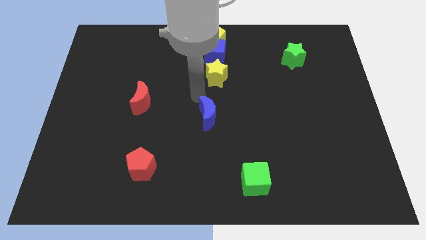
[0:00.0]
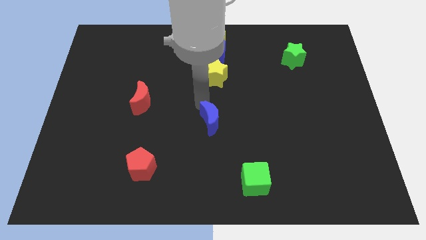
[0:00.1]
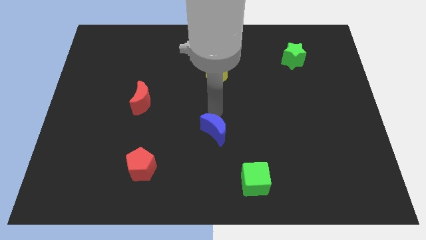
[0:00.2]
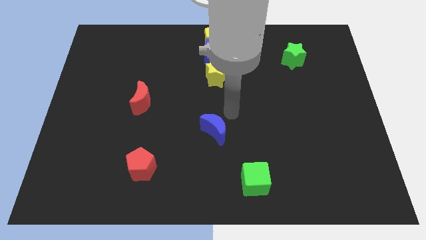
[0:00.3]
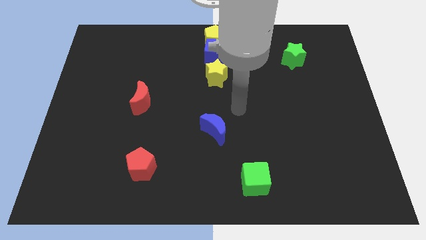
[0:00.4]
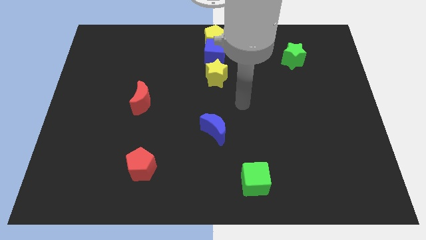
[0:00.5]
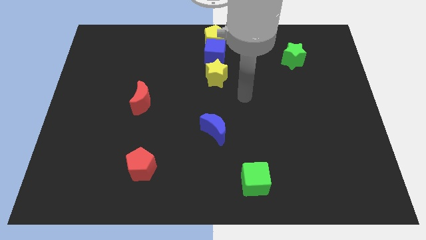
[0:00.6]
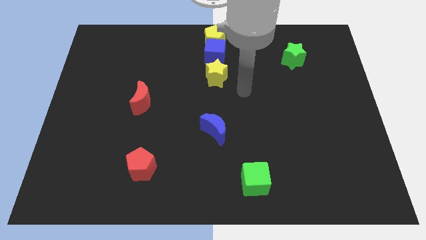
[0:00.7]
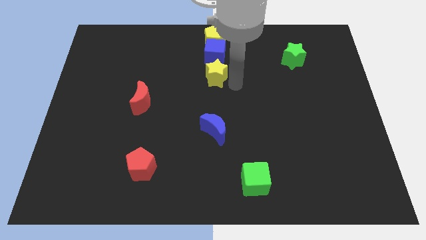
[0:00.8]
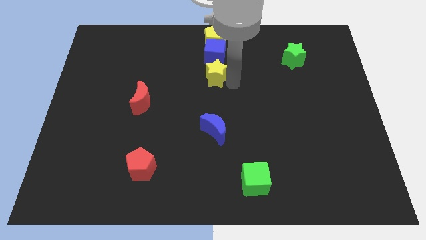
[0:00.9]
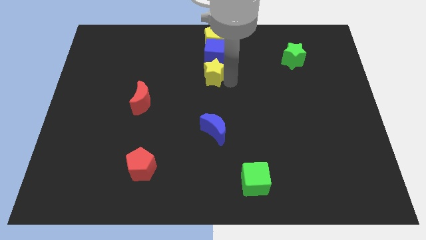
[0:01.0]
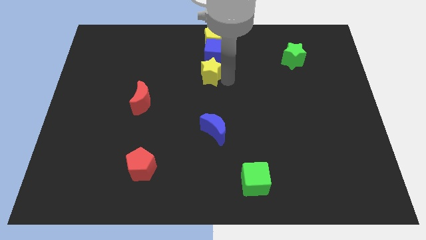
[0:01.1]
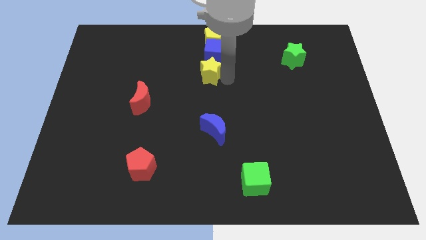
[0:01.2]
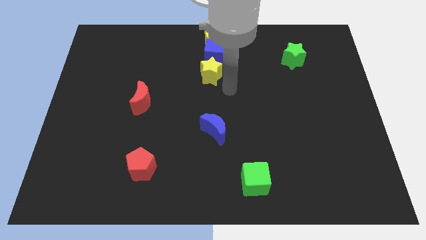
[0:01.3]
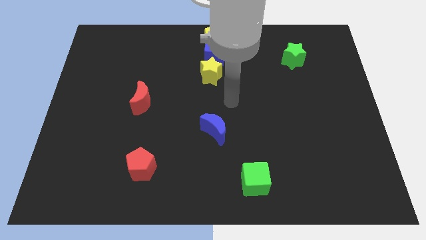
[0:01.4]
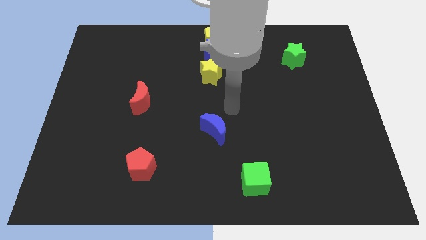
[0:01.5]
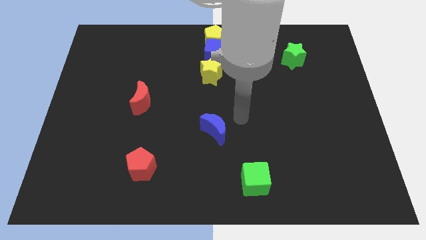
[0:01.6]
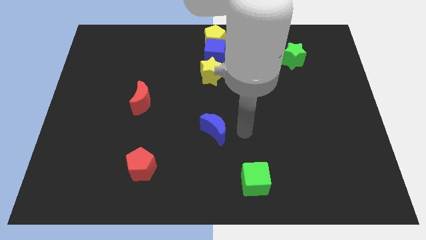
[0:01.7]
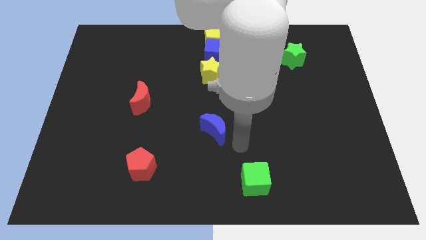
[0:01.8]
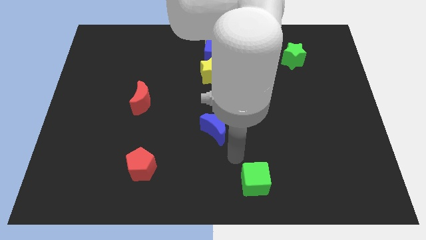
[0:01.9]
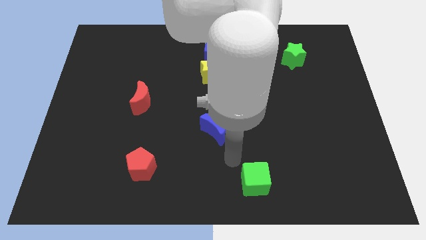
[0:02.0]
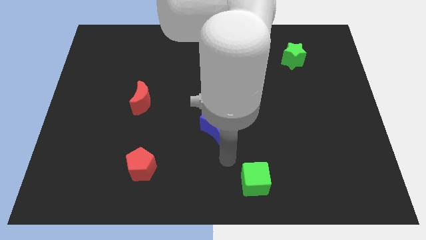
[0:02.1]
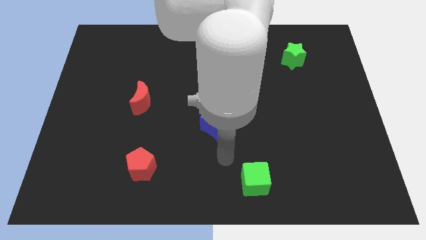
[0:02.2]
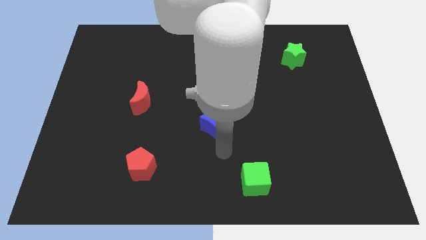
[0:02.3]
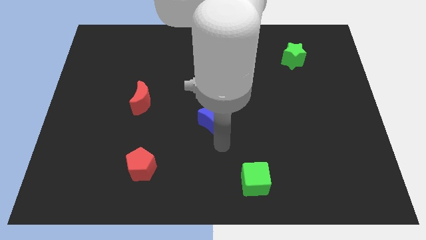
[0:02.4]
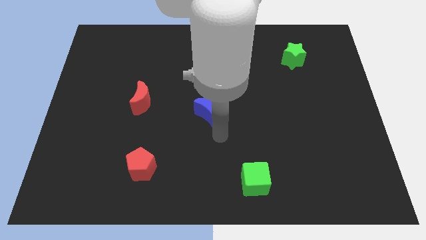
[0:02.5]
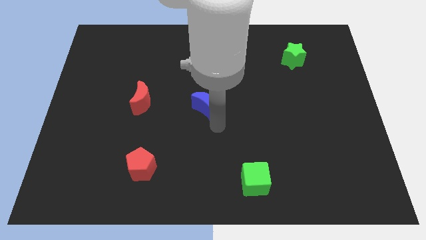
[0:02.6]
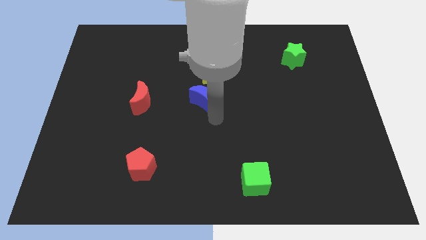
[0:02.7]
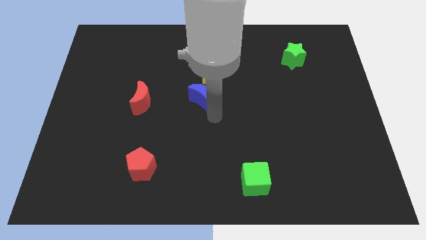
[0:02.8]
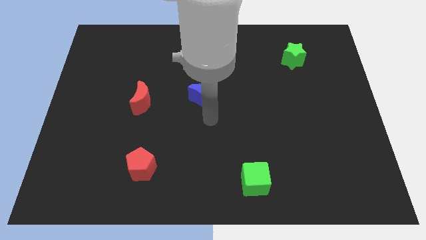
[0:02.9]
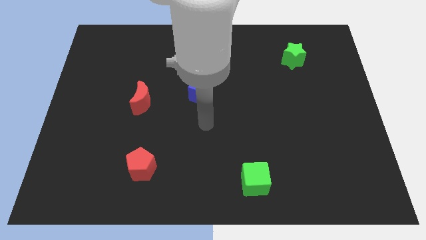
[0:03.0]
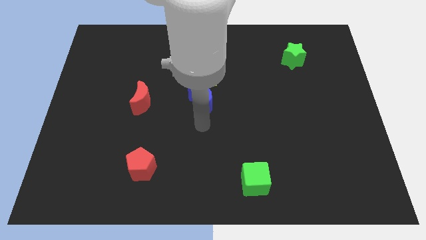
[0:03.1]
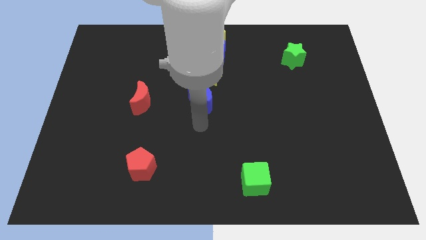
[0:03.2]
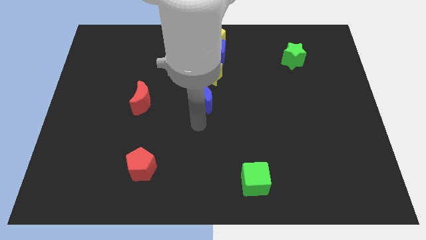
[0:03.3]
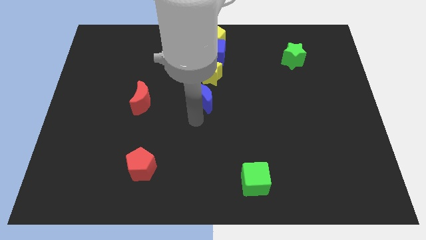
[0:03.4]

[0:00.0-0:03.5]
push the blue moon slightly upwards

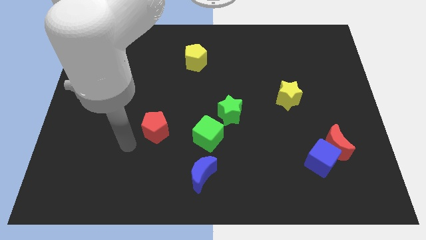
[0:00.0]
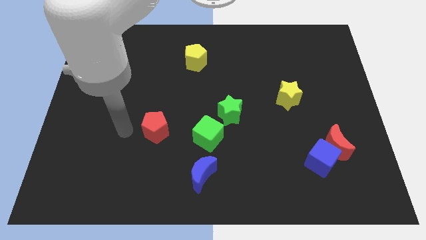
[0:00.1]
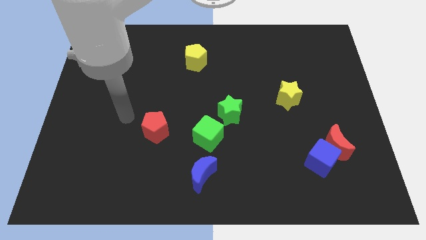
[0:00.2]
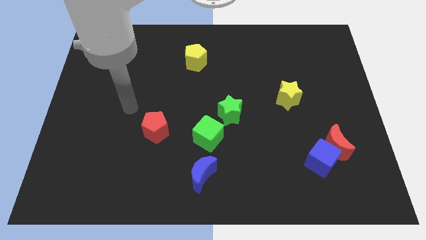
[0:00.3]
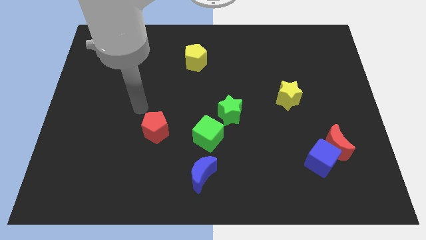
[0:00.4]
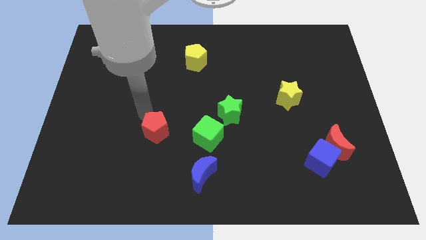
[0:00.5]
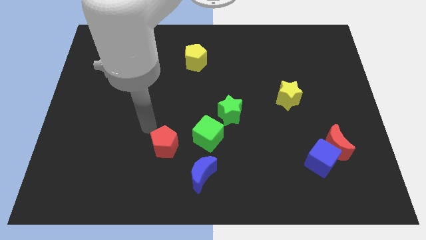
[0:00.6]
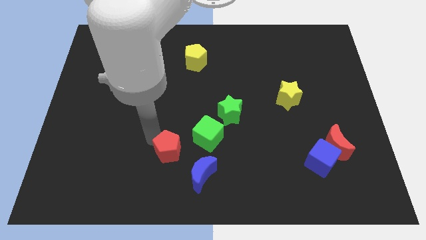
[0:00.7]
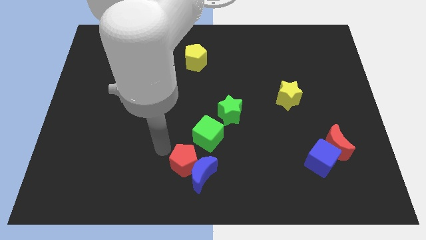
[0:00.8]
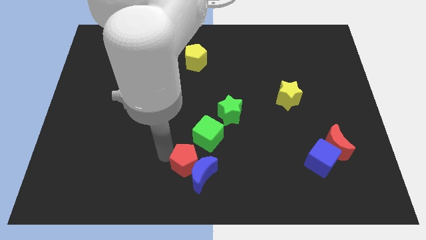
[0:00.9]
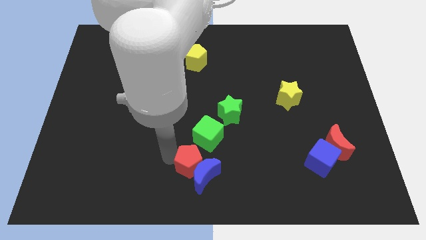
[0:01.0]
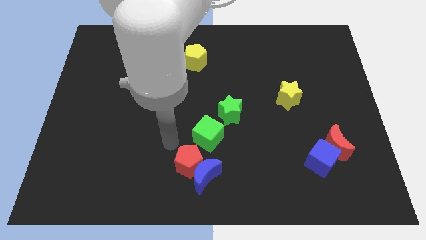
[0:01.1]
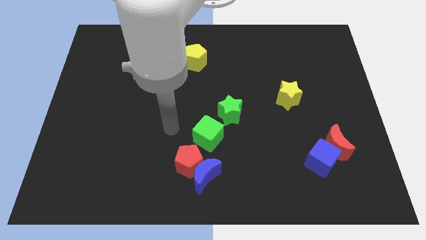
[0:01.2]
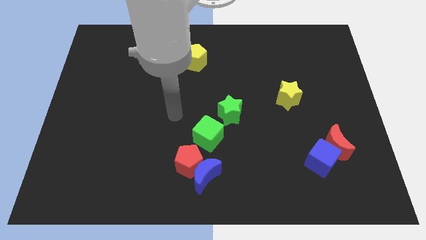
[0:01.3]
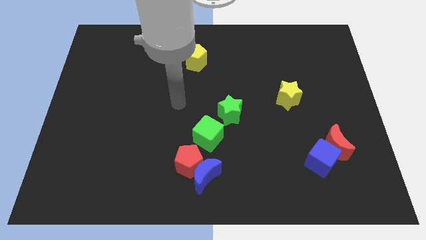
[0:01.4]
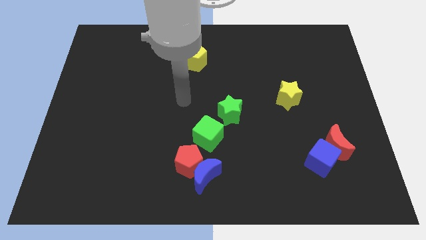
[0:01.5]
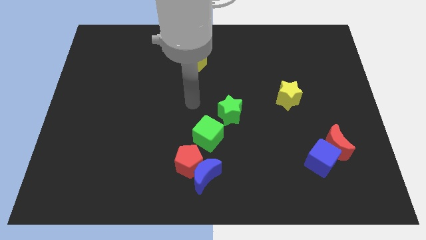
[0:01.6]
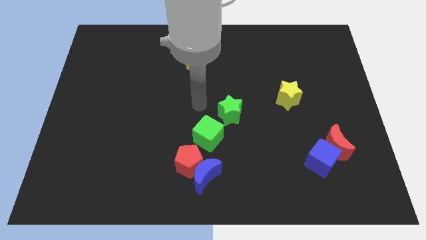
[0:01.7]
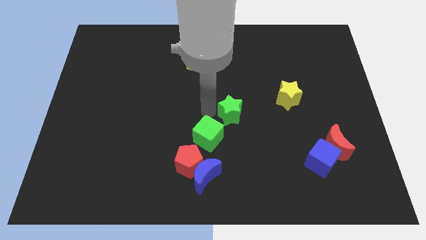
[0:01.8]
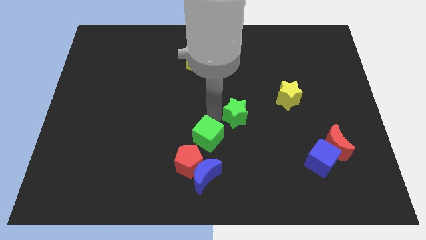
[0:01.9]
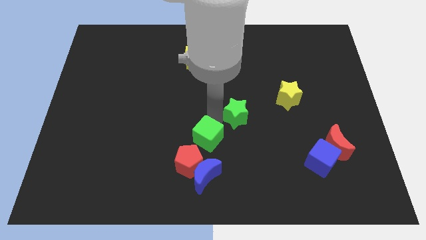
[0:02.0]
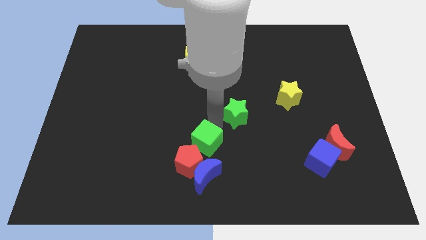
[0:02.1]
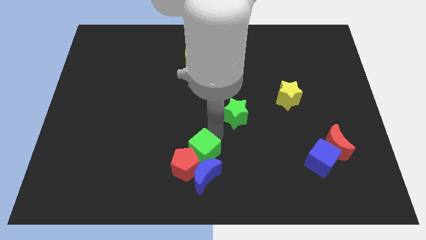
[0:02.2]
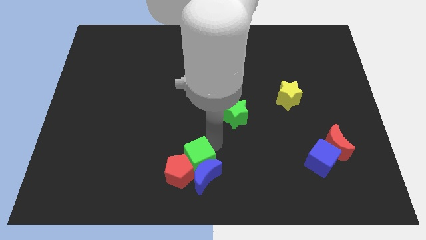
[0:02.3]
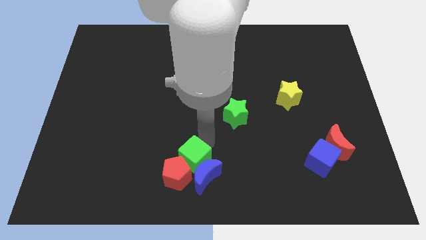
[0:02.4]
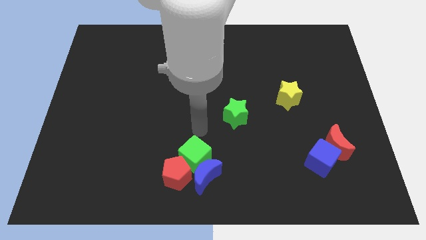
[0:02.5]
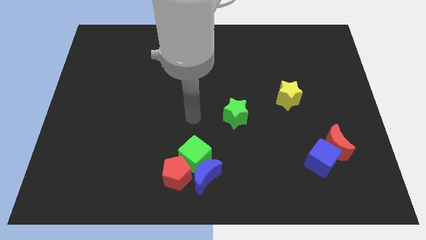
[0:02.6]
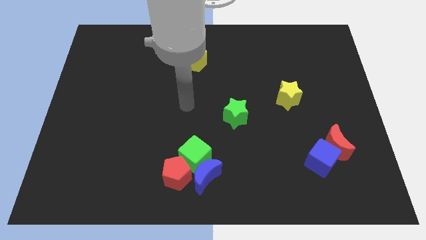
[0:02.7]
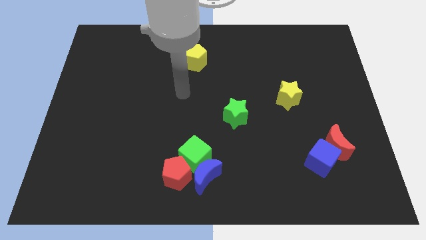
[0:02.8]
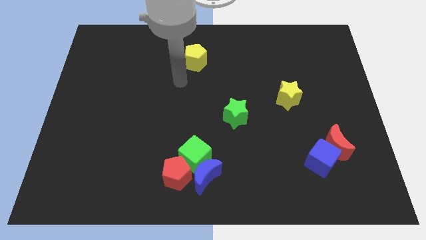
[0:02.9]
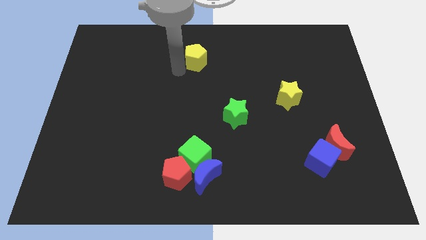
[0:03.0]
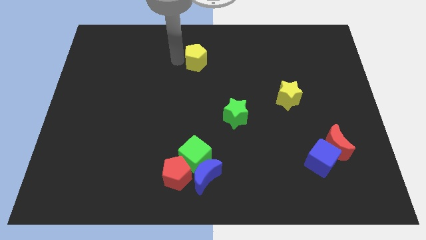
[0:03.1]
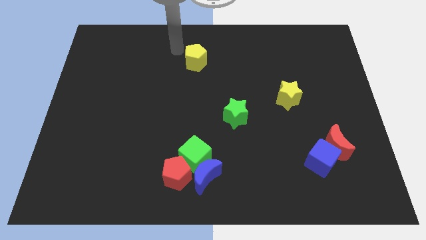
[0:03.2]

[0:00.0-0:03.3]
push the green star towards bottom of the board

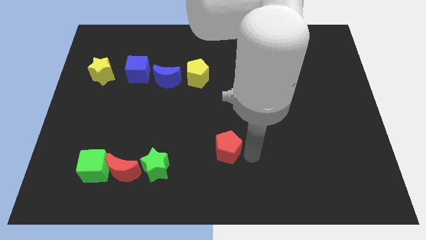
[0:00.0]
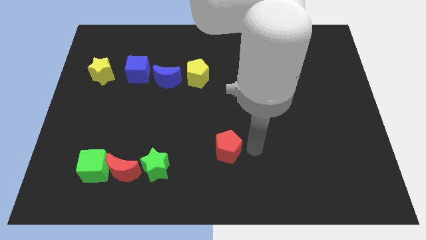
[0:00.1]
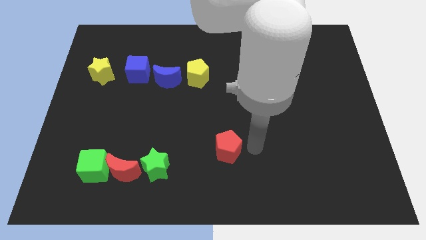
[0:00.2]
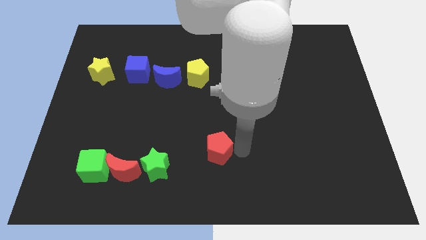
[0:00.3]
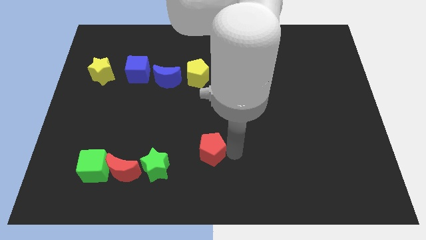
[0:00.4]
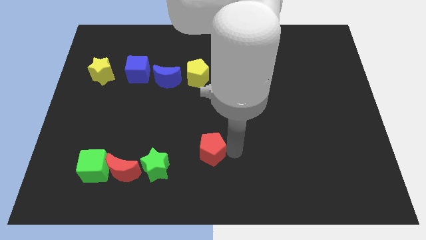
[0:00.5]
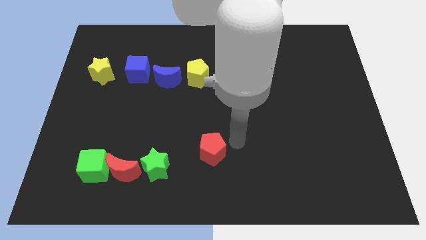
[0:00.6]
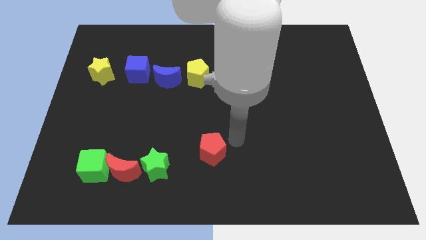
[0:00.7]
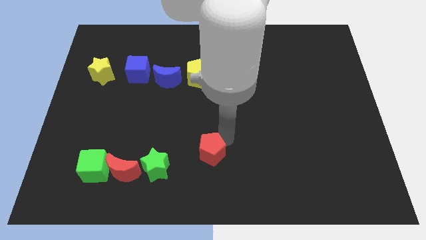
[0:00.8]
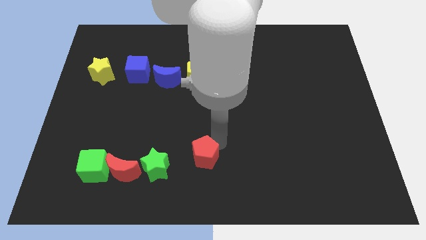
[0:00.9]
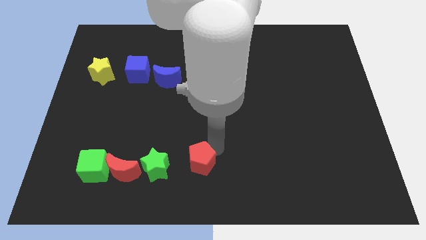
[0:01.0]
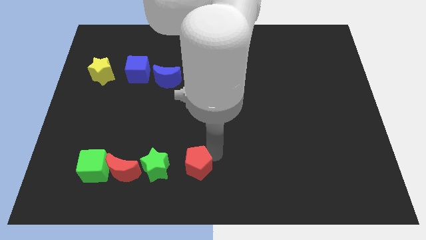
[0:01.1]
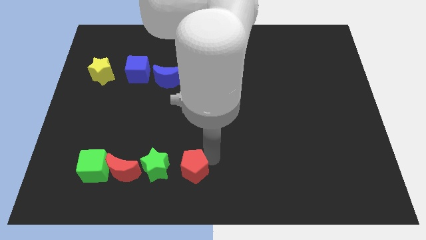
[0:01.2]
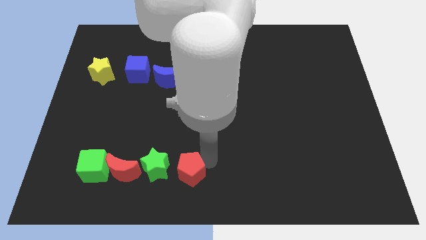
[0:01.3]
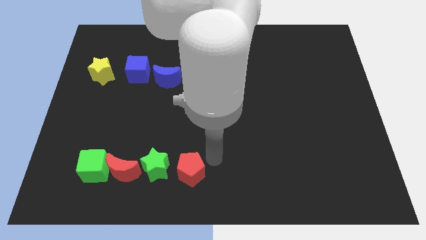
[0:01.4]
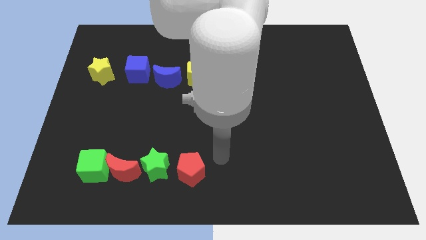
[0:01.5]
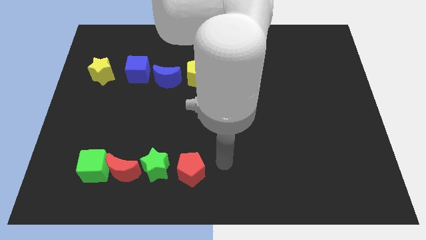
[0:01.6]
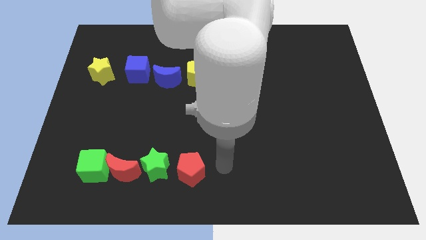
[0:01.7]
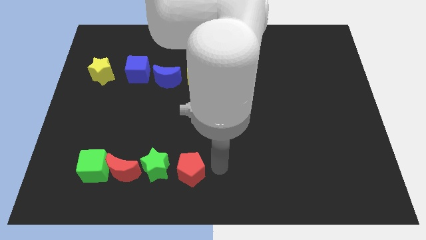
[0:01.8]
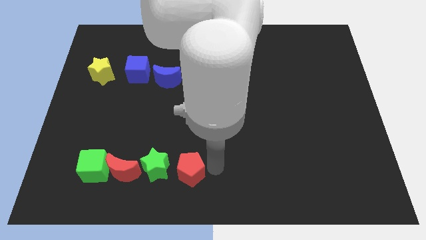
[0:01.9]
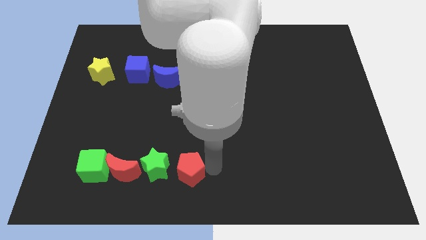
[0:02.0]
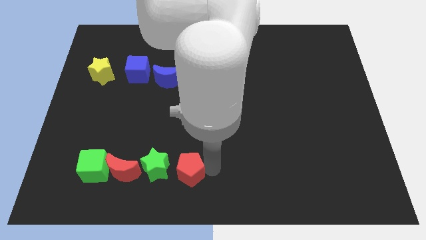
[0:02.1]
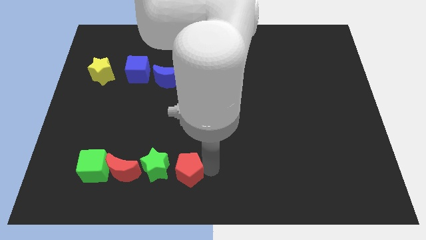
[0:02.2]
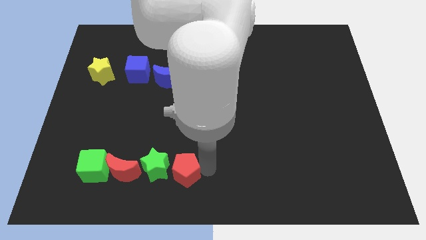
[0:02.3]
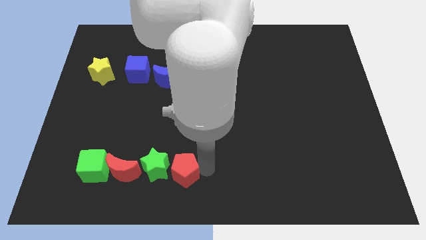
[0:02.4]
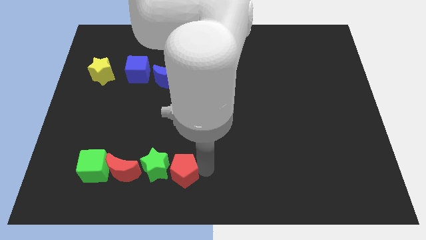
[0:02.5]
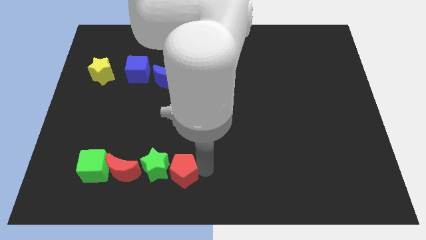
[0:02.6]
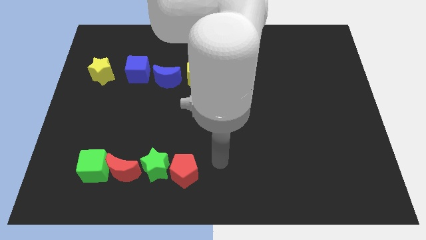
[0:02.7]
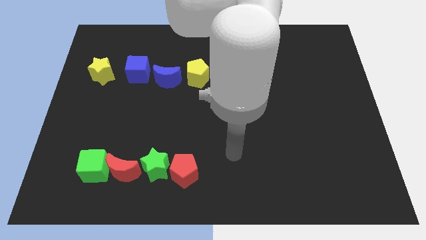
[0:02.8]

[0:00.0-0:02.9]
move the red pentagon towards the green star
